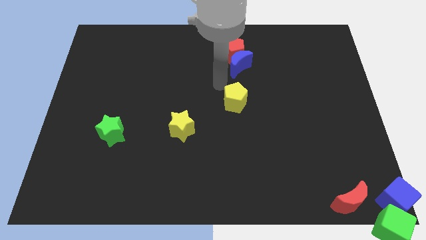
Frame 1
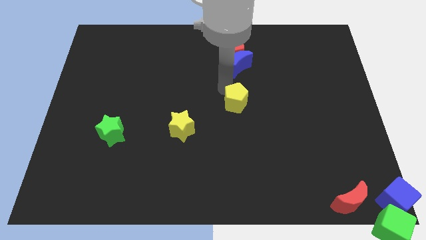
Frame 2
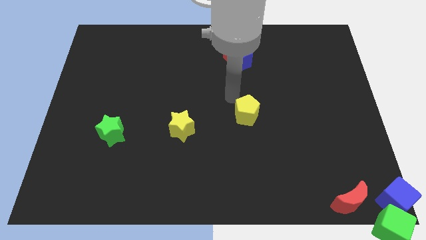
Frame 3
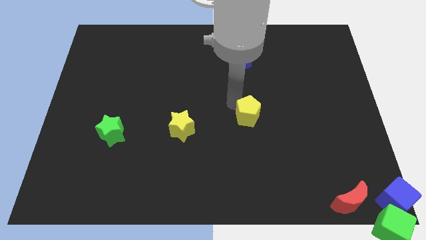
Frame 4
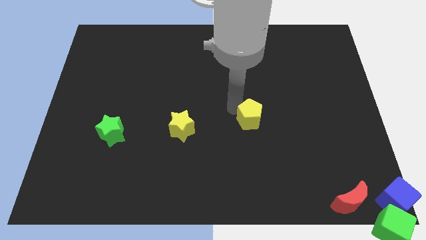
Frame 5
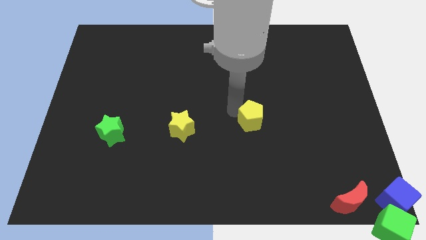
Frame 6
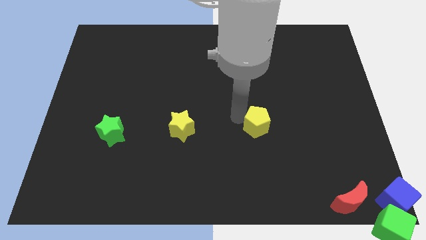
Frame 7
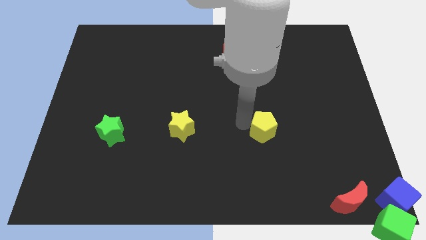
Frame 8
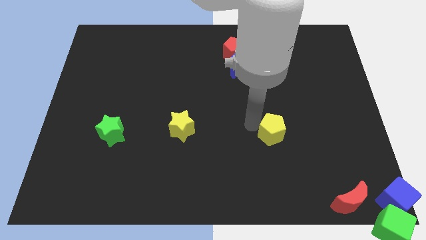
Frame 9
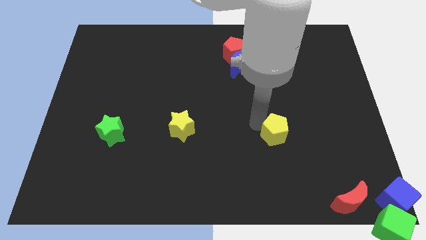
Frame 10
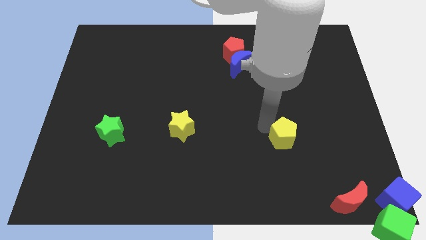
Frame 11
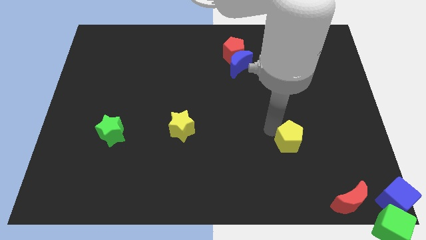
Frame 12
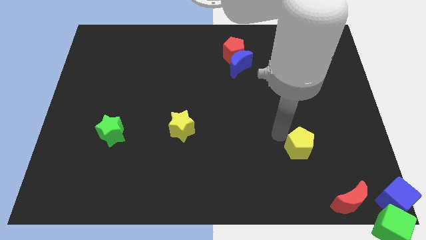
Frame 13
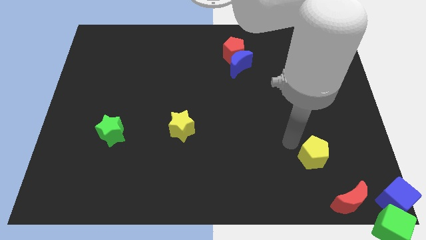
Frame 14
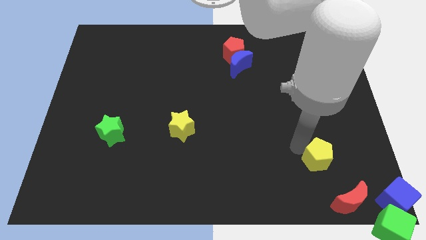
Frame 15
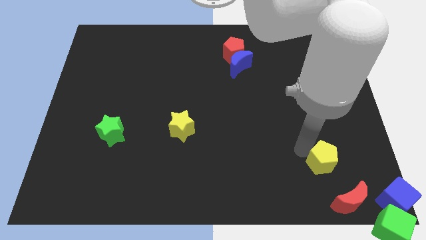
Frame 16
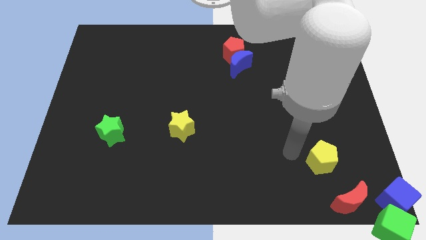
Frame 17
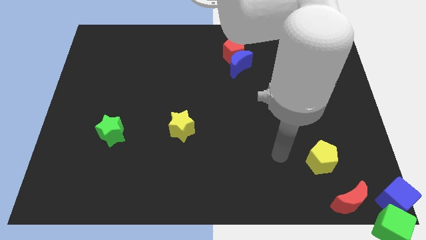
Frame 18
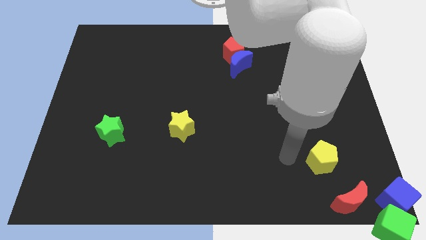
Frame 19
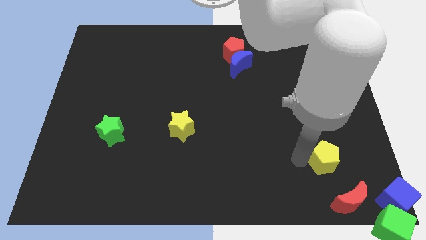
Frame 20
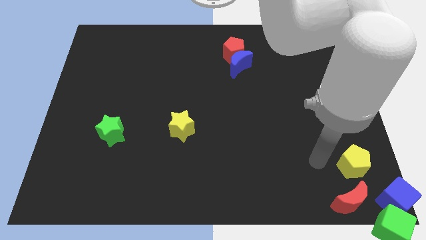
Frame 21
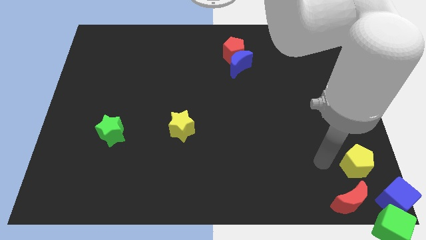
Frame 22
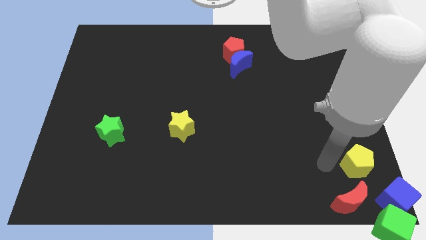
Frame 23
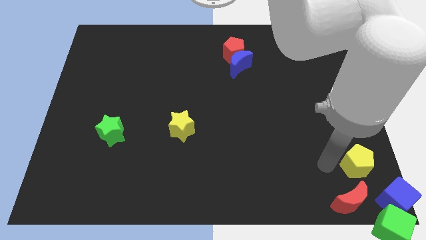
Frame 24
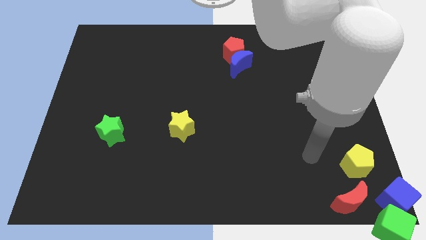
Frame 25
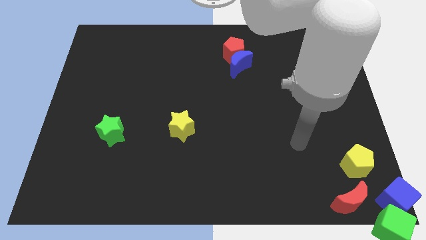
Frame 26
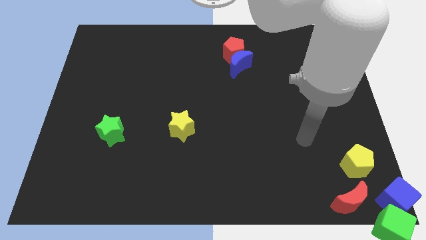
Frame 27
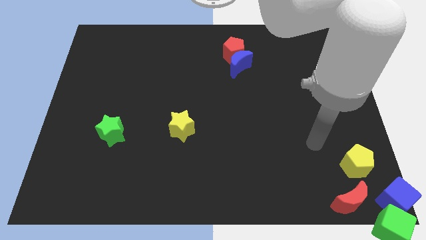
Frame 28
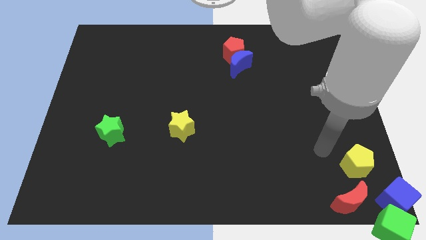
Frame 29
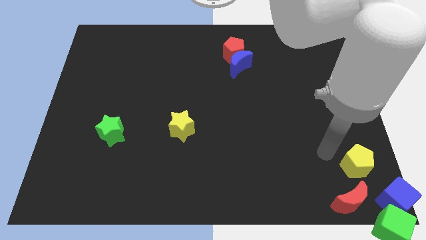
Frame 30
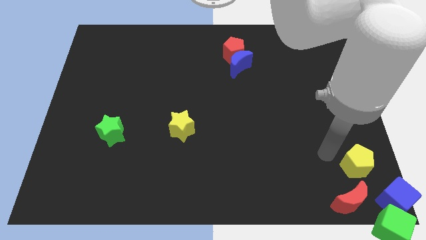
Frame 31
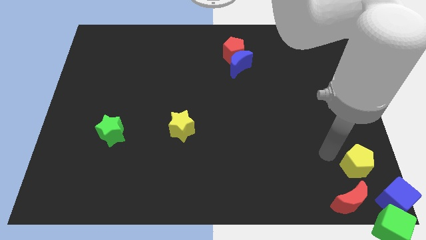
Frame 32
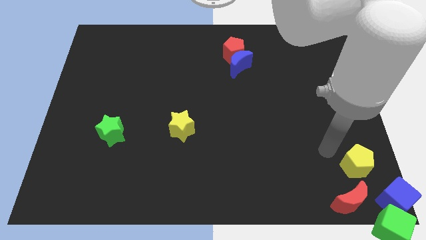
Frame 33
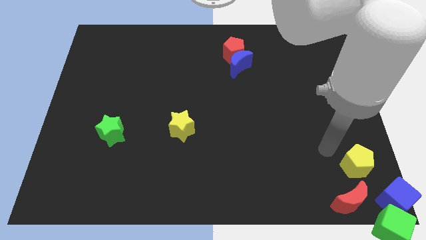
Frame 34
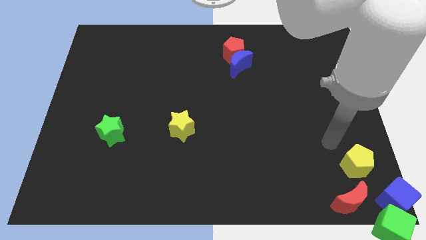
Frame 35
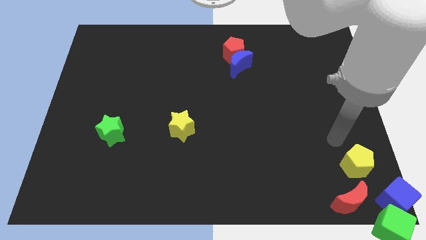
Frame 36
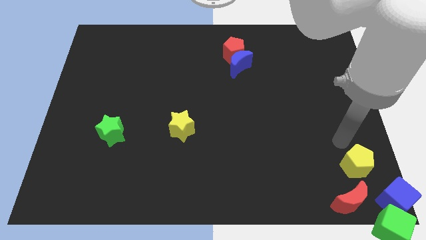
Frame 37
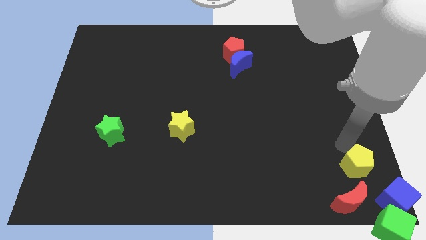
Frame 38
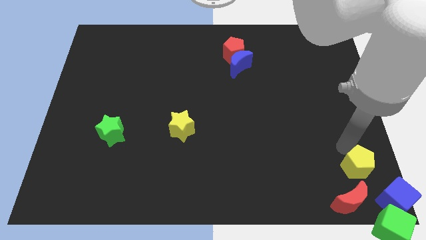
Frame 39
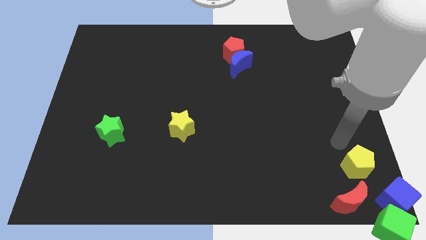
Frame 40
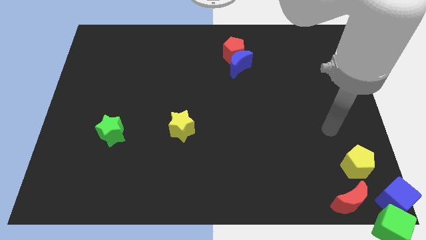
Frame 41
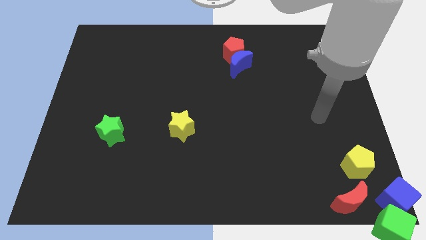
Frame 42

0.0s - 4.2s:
push the yellow pentagon to the top side of red moon

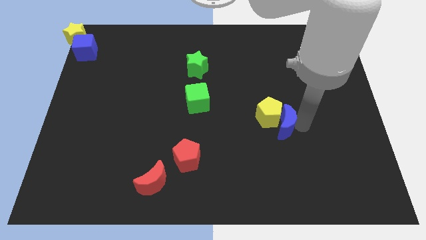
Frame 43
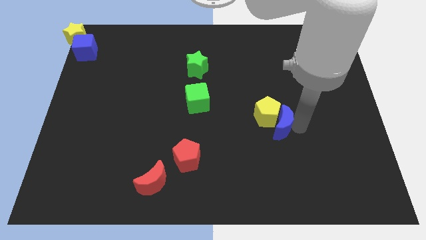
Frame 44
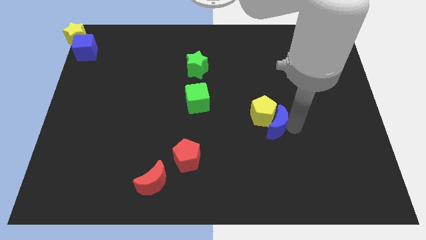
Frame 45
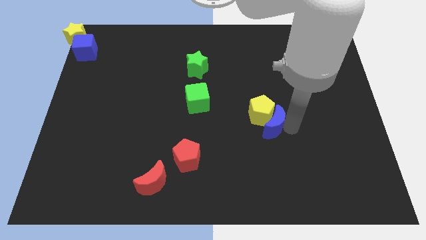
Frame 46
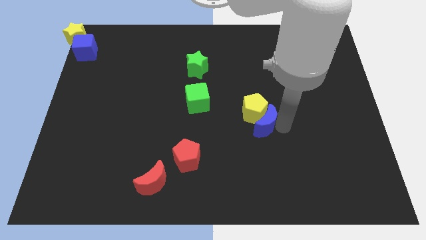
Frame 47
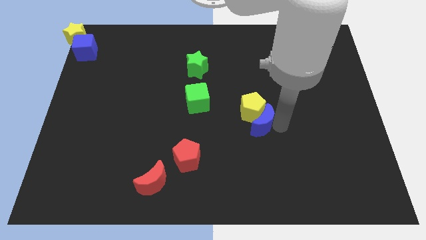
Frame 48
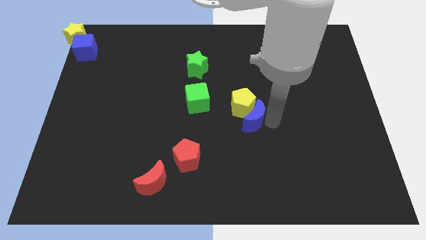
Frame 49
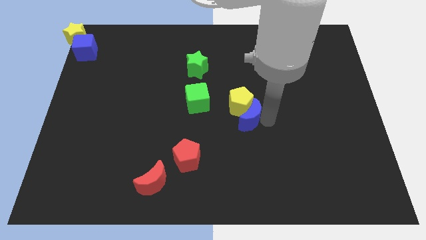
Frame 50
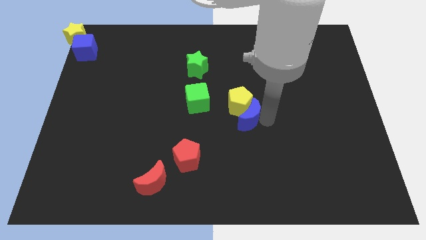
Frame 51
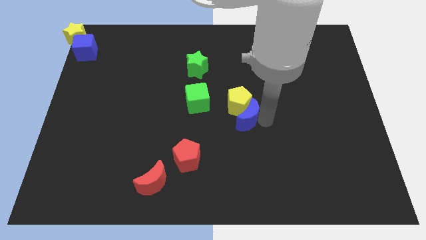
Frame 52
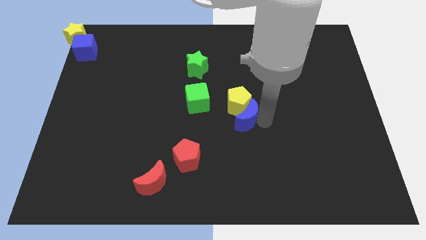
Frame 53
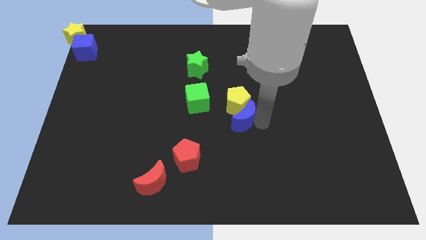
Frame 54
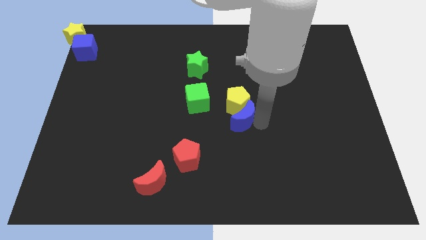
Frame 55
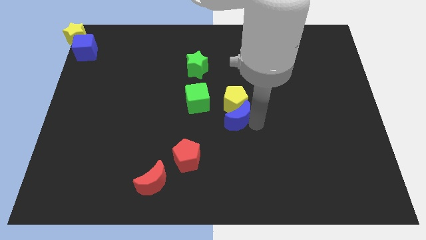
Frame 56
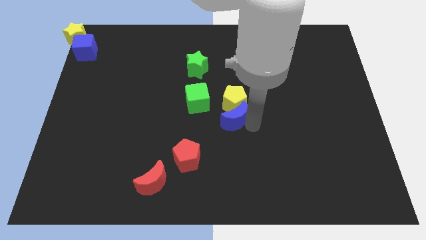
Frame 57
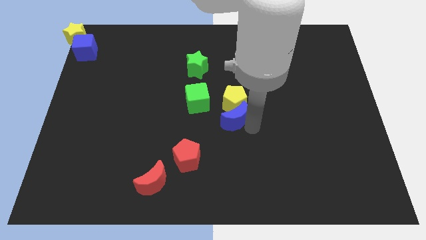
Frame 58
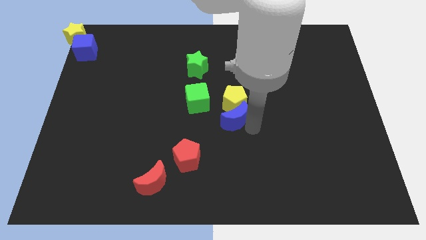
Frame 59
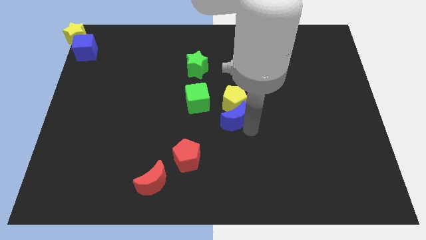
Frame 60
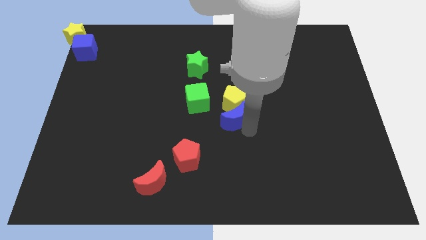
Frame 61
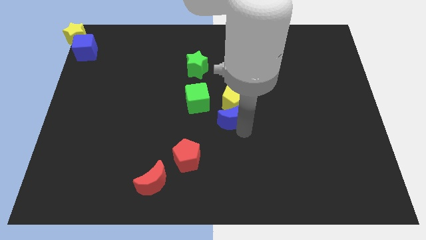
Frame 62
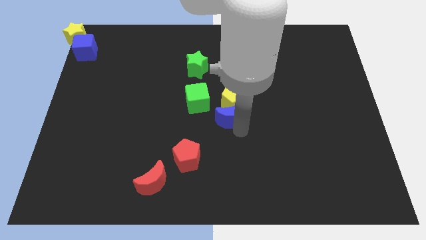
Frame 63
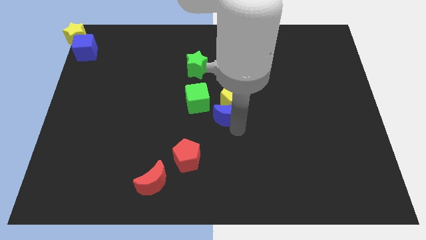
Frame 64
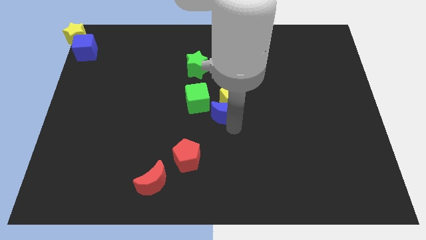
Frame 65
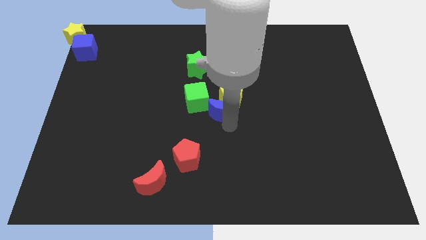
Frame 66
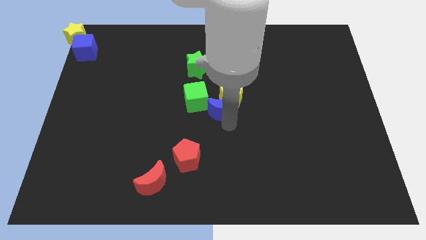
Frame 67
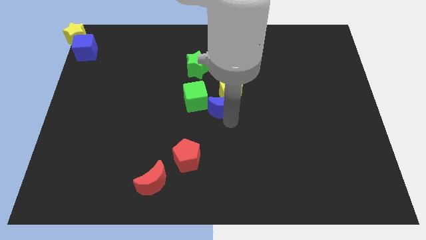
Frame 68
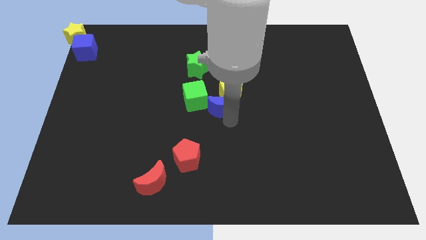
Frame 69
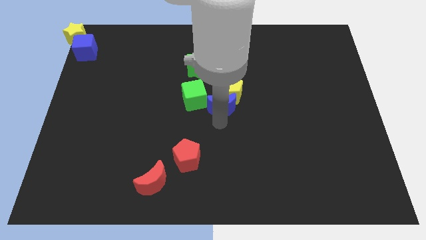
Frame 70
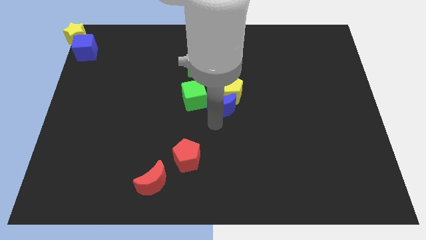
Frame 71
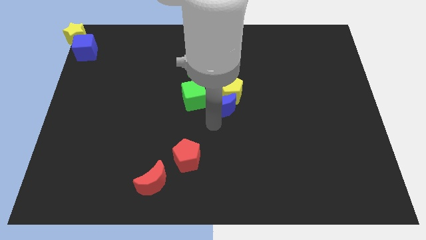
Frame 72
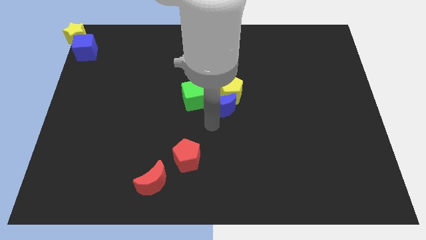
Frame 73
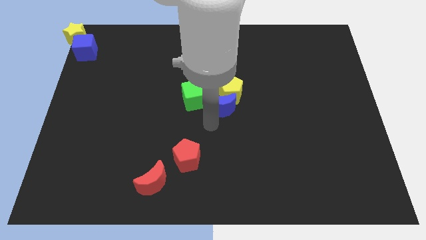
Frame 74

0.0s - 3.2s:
place blue crescent below yellow pentagon

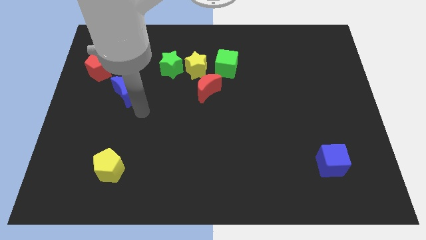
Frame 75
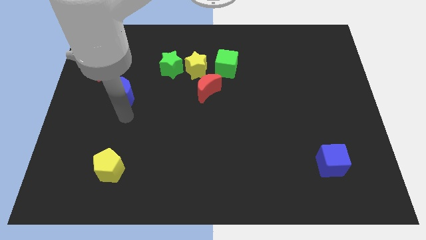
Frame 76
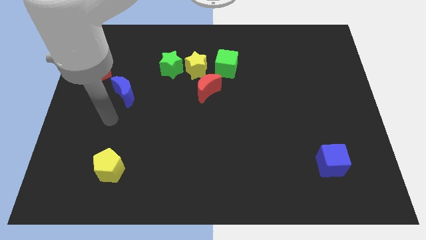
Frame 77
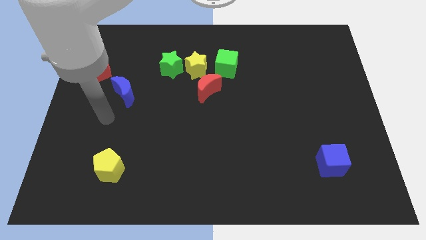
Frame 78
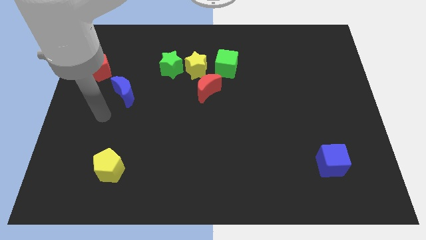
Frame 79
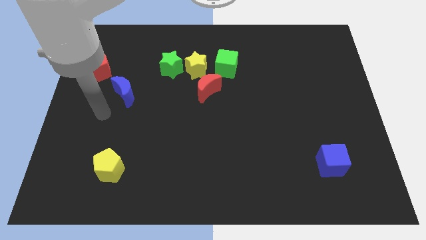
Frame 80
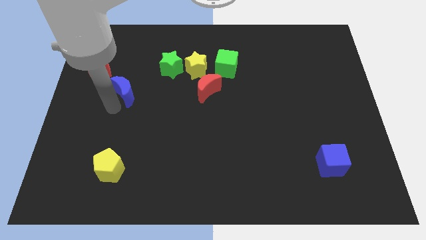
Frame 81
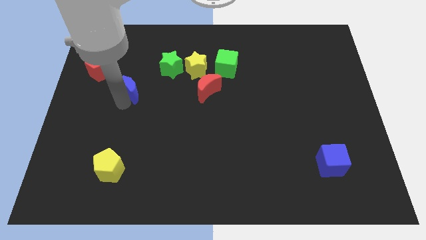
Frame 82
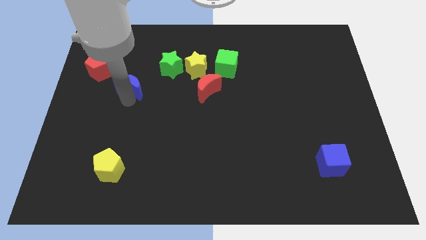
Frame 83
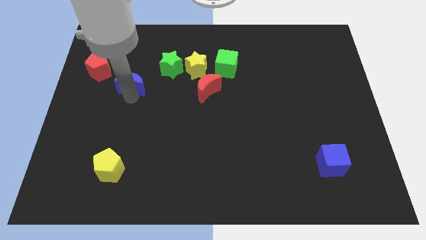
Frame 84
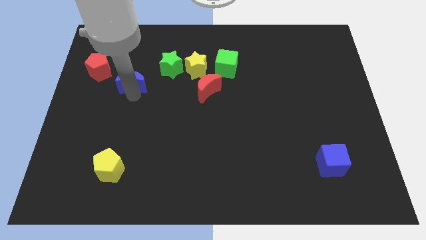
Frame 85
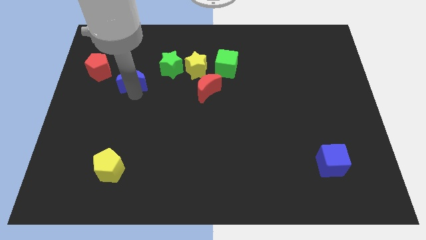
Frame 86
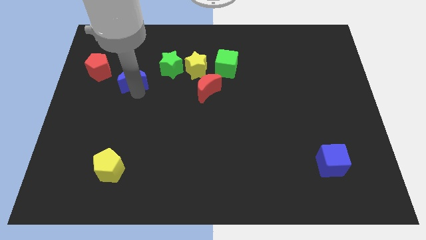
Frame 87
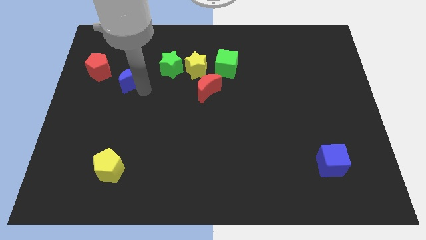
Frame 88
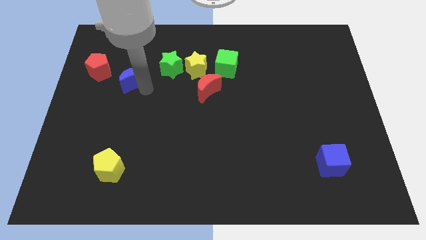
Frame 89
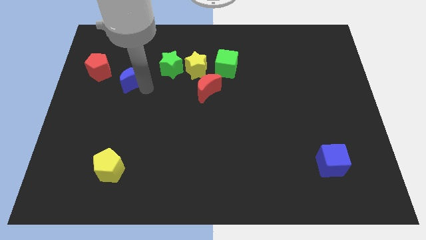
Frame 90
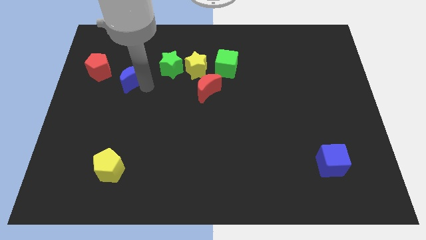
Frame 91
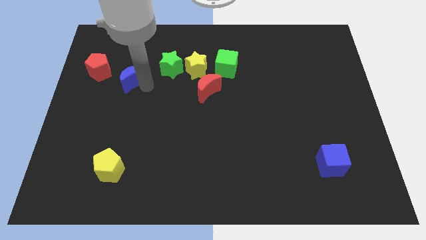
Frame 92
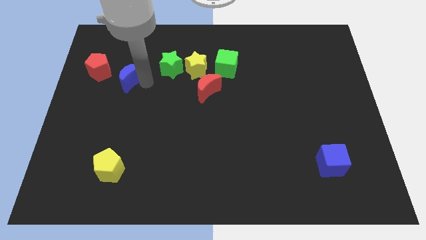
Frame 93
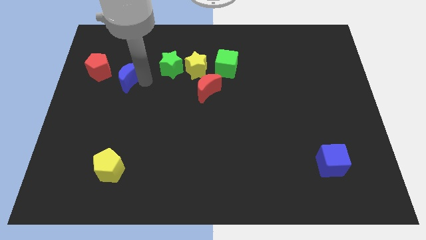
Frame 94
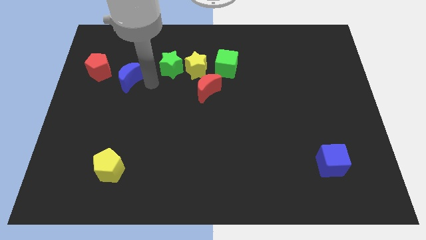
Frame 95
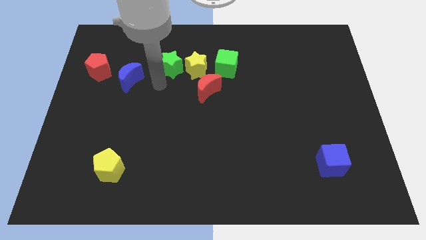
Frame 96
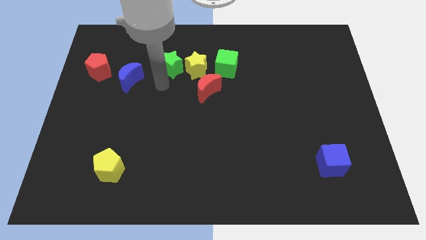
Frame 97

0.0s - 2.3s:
move the blue moon slightly upwards
